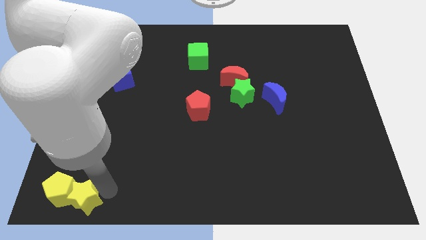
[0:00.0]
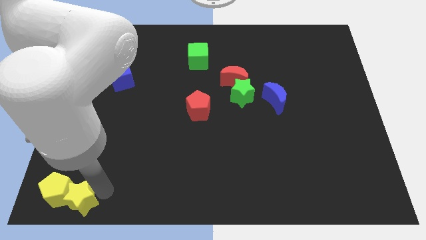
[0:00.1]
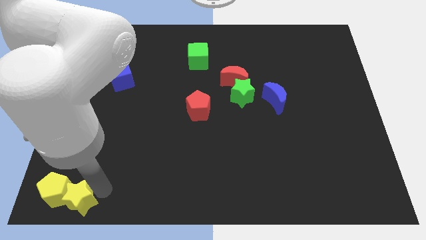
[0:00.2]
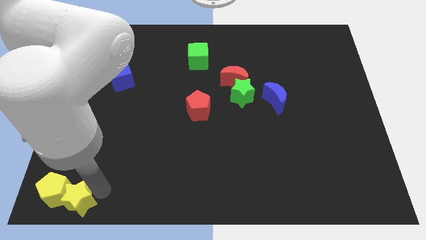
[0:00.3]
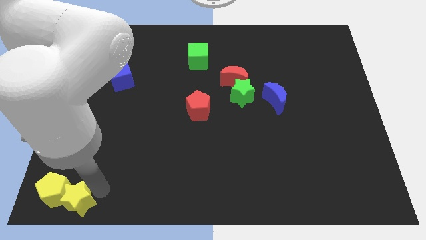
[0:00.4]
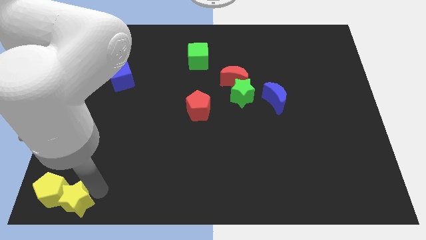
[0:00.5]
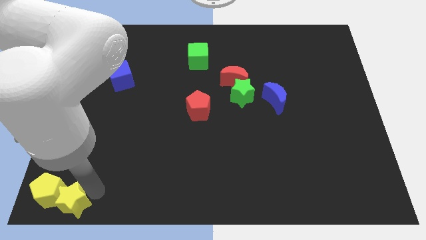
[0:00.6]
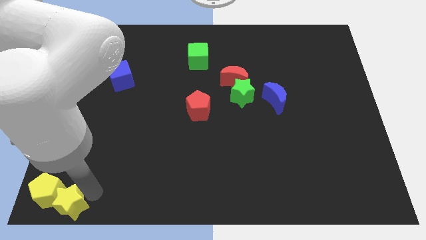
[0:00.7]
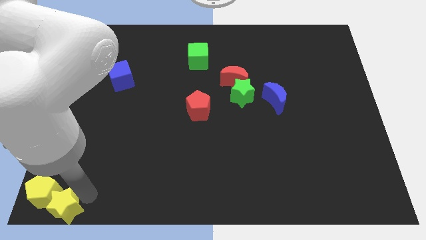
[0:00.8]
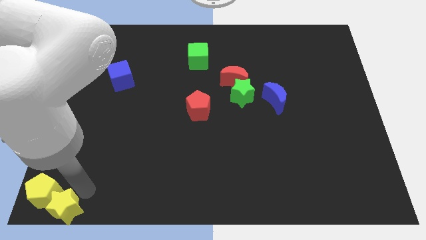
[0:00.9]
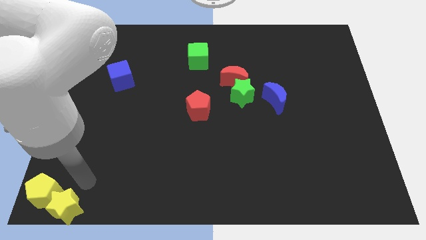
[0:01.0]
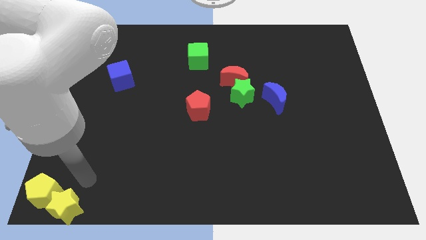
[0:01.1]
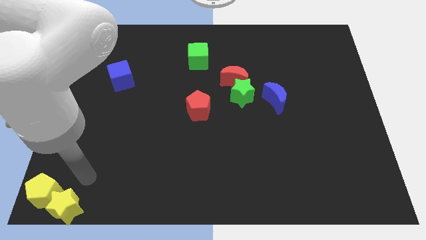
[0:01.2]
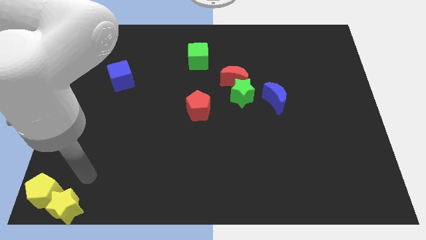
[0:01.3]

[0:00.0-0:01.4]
place the yellow blocks at the bottom left corner of the board

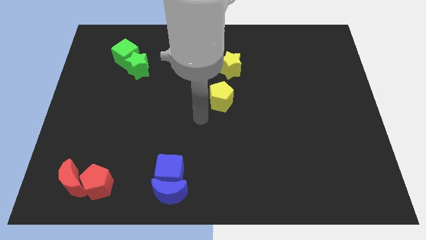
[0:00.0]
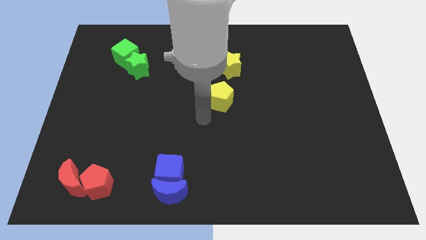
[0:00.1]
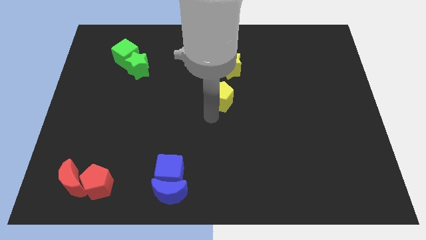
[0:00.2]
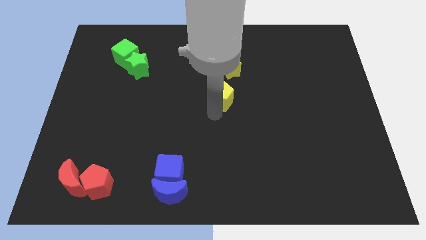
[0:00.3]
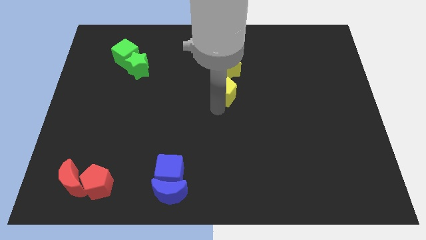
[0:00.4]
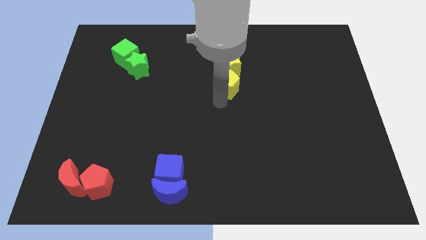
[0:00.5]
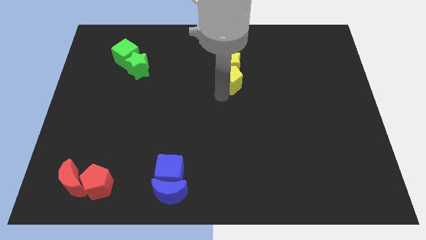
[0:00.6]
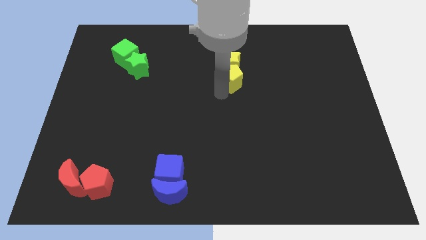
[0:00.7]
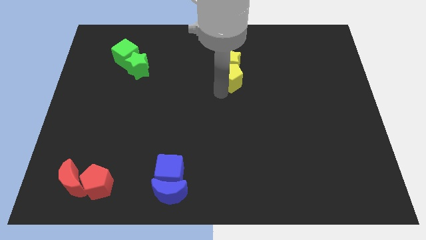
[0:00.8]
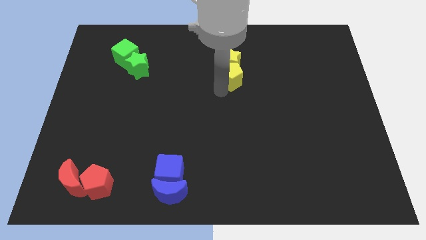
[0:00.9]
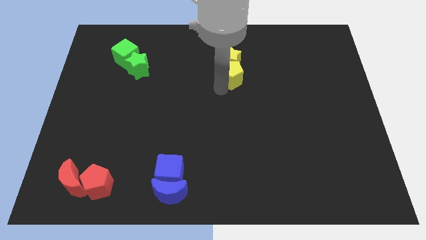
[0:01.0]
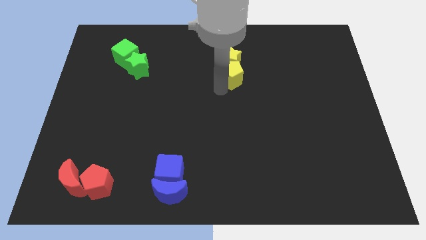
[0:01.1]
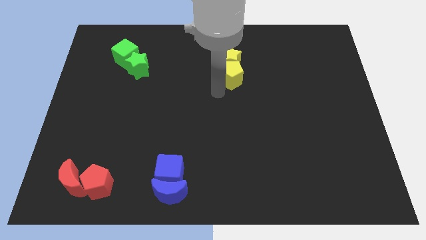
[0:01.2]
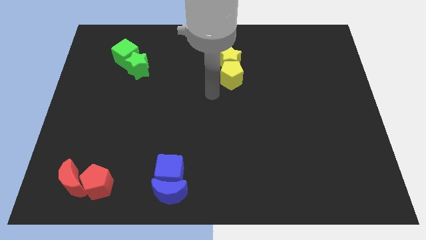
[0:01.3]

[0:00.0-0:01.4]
move the yellow pentagon into the bottom of the yellow star

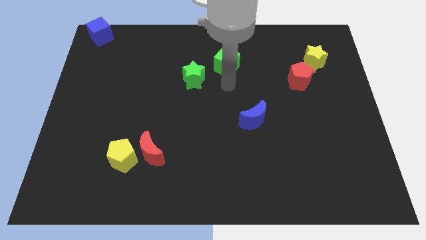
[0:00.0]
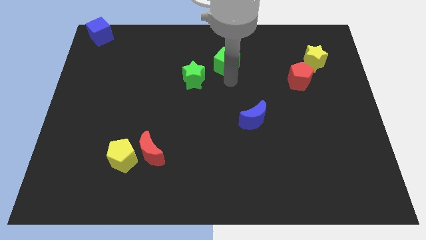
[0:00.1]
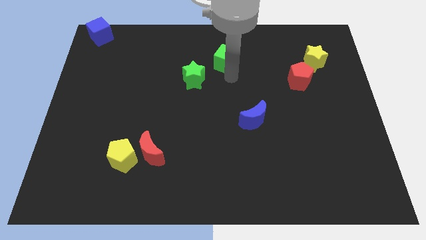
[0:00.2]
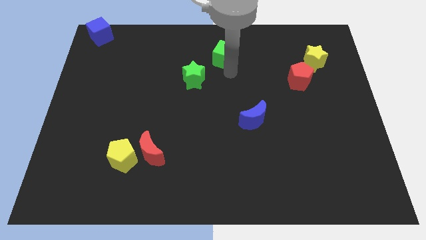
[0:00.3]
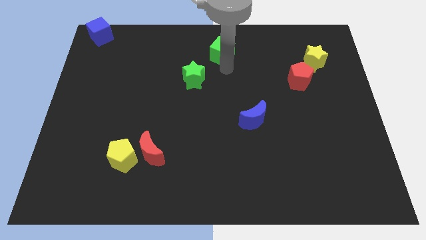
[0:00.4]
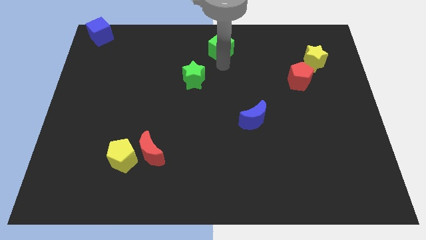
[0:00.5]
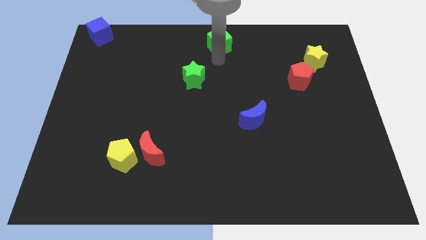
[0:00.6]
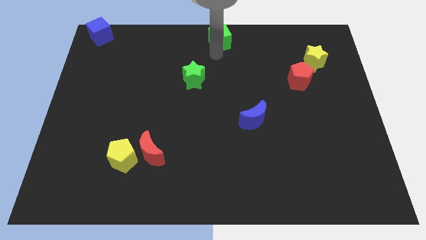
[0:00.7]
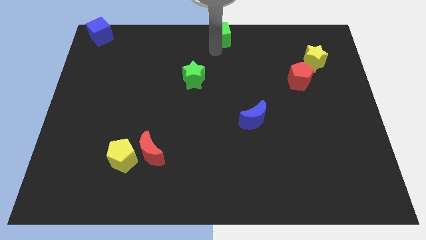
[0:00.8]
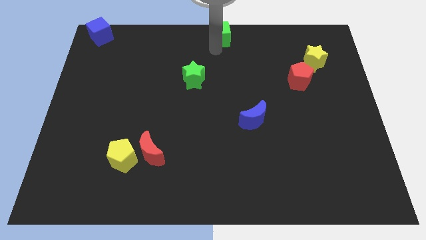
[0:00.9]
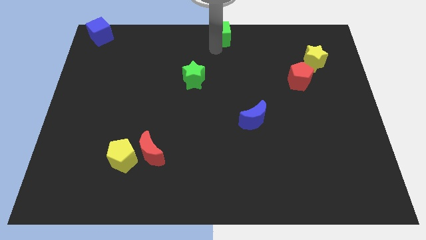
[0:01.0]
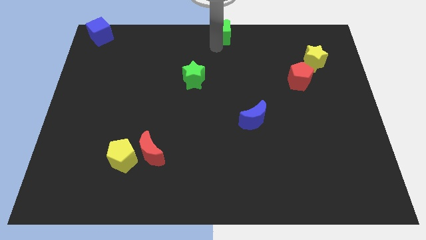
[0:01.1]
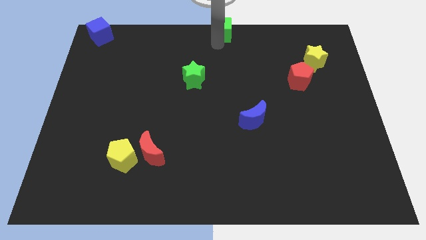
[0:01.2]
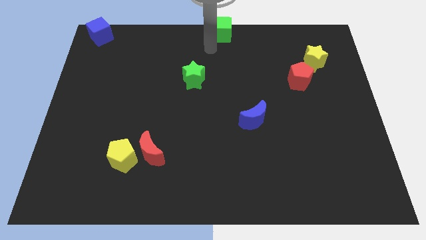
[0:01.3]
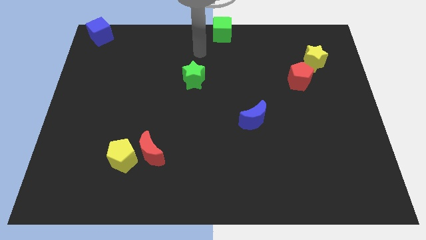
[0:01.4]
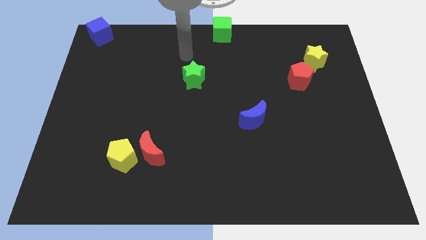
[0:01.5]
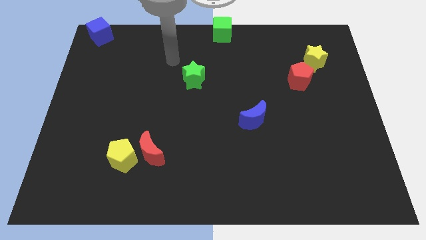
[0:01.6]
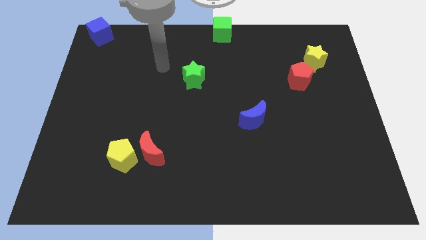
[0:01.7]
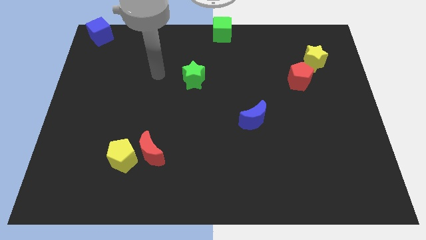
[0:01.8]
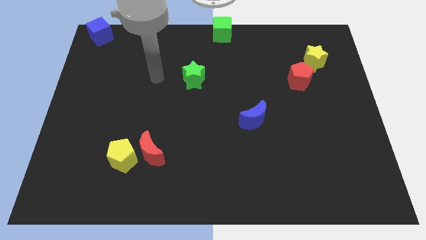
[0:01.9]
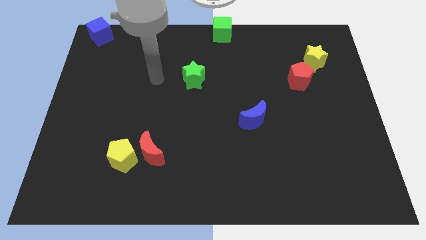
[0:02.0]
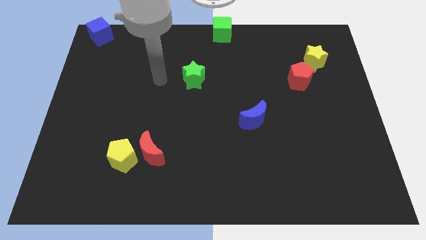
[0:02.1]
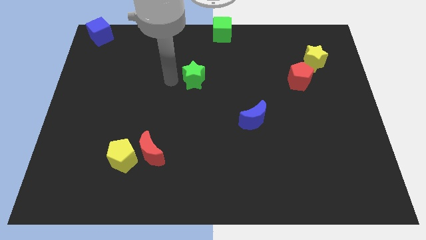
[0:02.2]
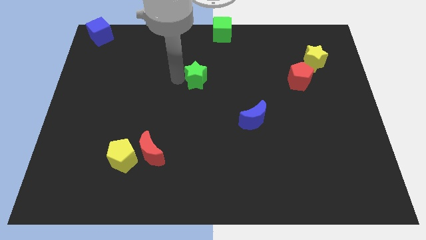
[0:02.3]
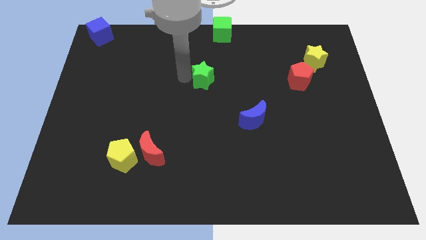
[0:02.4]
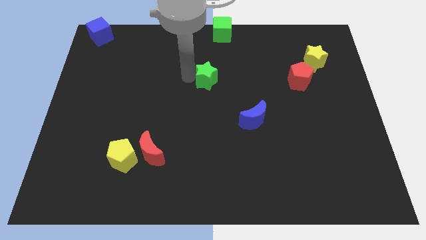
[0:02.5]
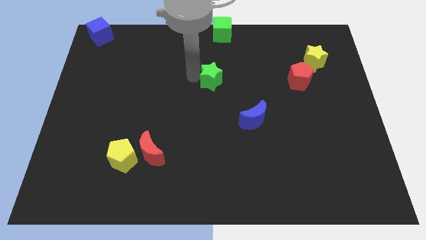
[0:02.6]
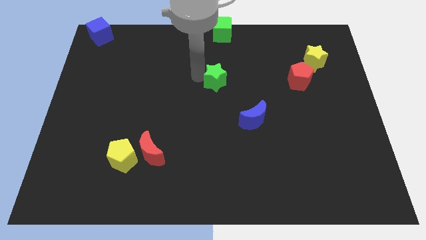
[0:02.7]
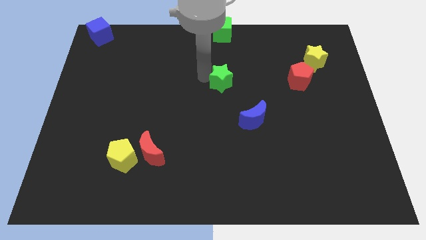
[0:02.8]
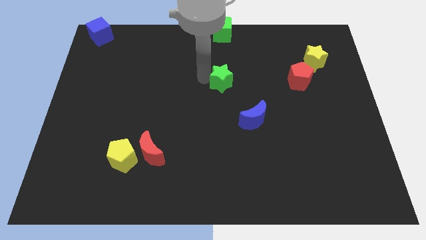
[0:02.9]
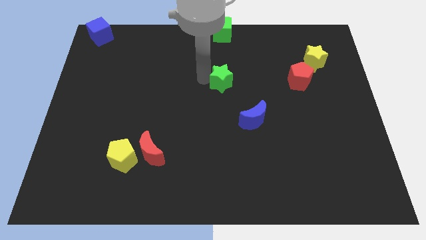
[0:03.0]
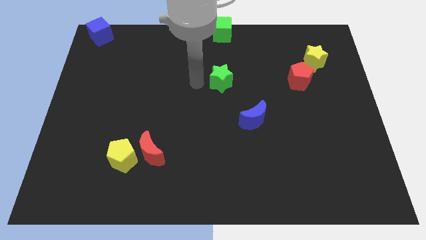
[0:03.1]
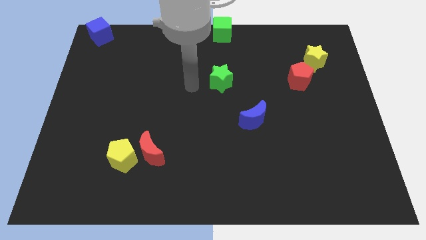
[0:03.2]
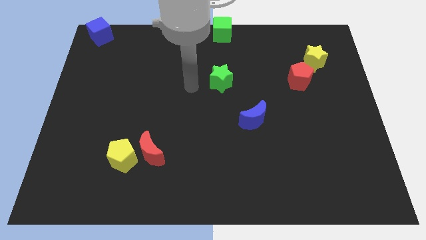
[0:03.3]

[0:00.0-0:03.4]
place green star below green cube

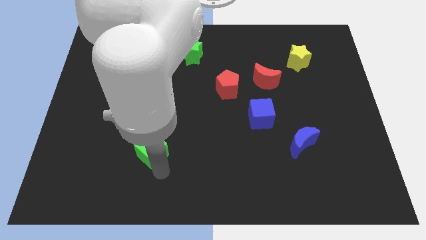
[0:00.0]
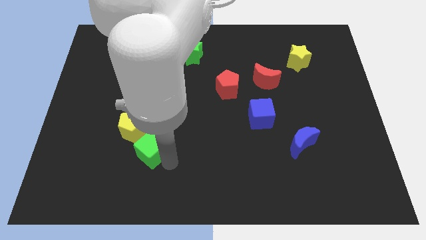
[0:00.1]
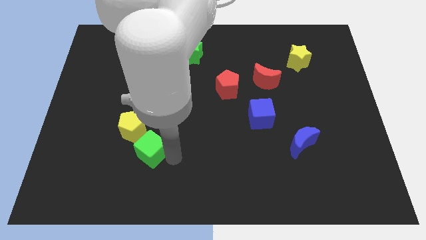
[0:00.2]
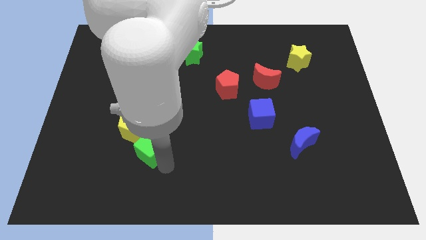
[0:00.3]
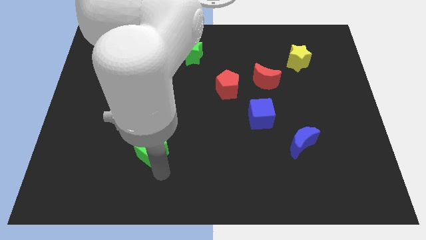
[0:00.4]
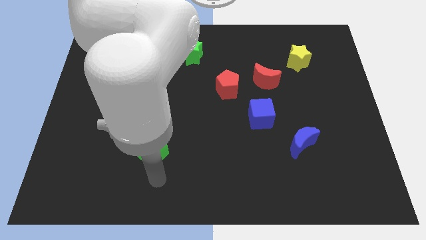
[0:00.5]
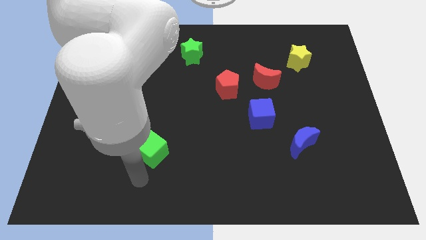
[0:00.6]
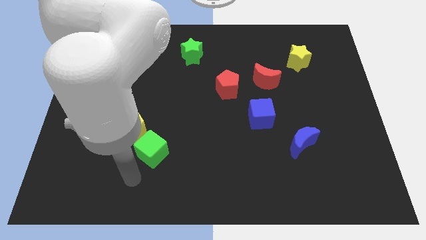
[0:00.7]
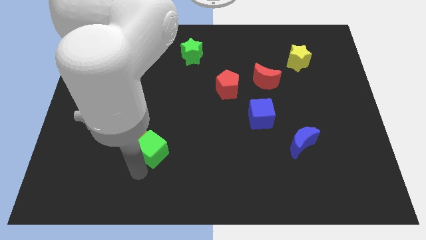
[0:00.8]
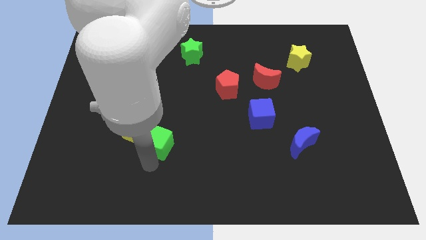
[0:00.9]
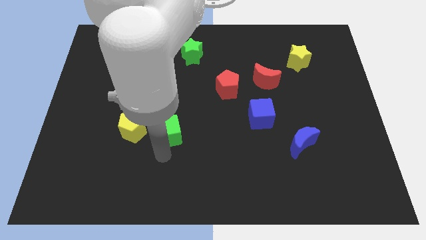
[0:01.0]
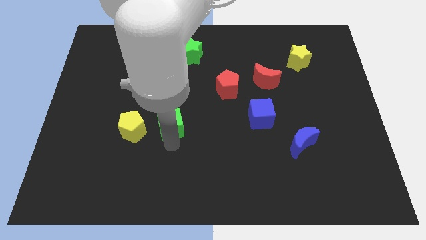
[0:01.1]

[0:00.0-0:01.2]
move the green cube parallel right of the yellow pentagon

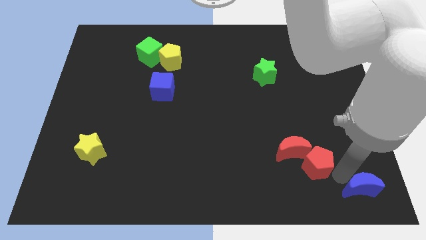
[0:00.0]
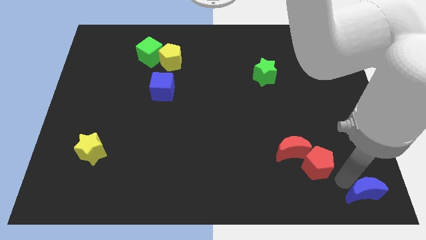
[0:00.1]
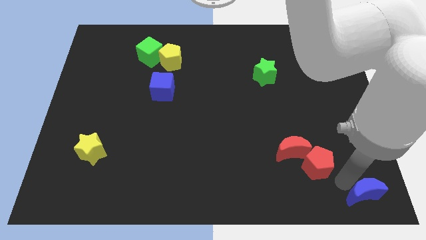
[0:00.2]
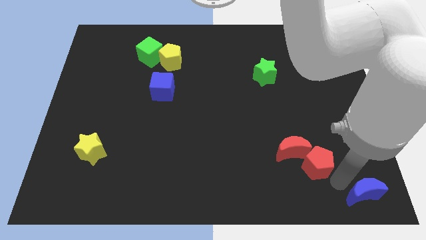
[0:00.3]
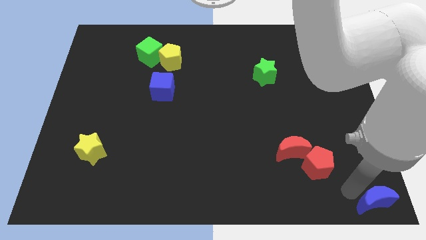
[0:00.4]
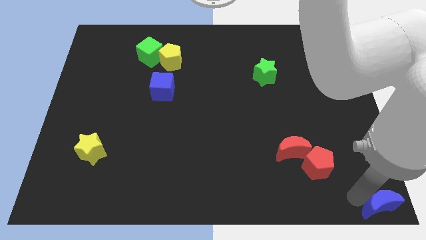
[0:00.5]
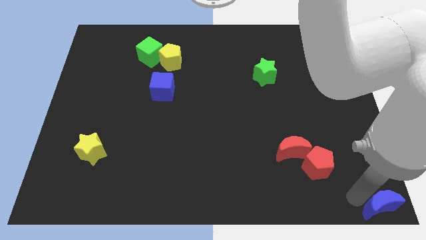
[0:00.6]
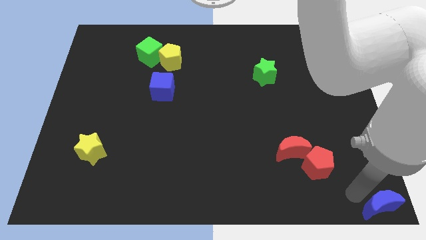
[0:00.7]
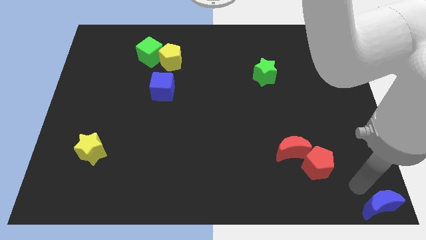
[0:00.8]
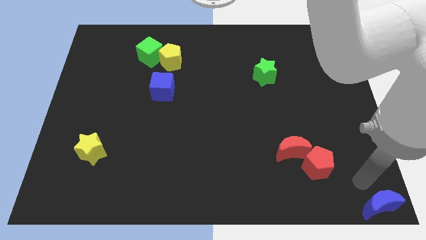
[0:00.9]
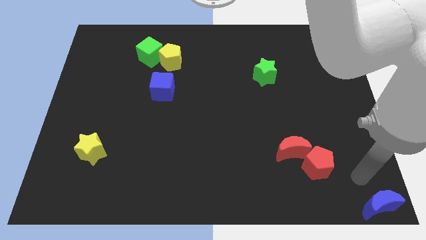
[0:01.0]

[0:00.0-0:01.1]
move the blue crescent to the bottom right corner of the board

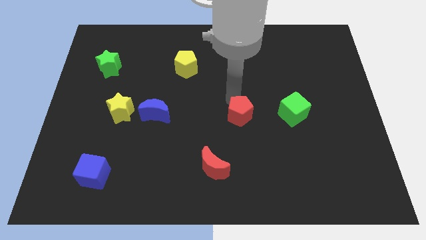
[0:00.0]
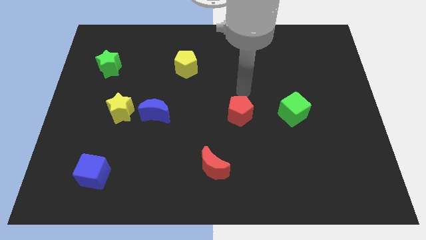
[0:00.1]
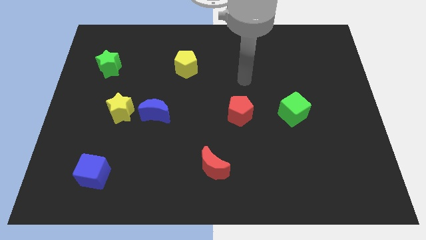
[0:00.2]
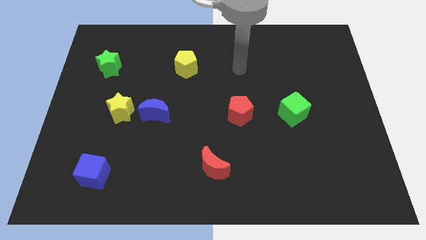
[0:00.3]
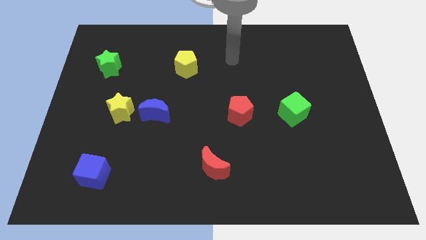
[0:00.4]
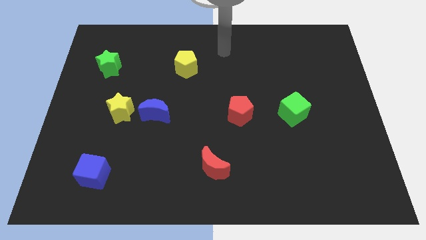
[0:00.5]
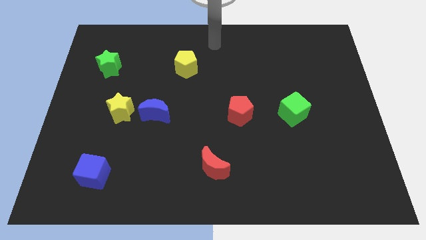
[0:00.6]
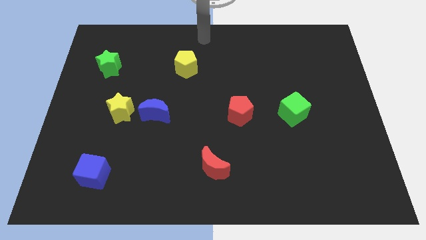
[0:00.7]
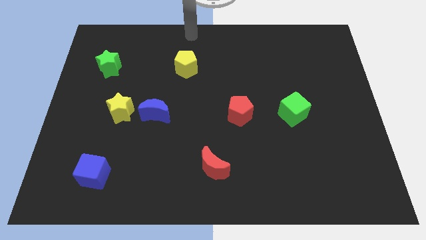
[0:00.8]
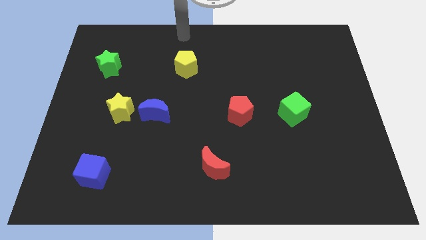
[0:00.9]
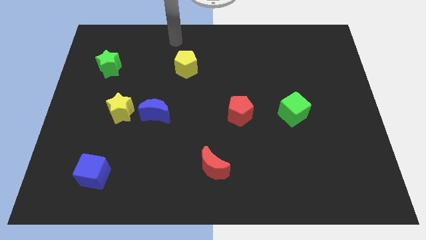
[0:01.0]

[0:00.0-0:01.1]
move your arm away from the red pentagon
